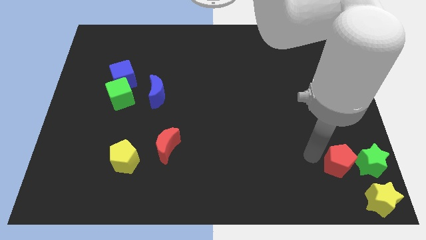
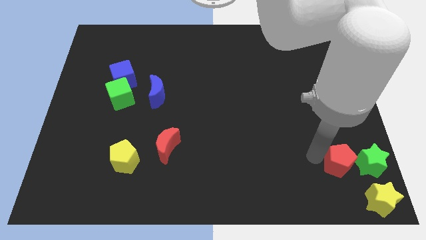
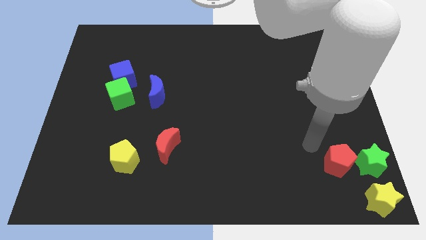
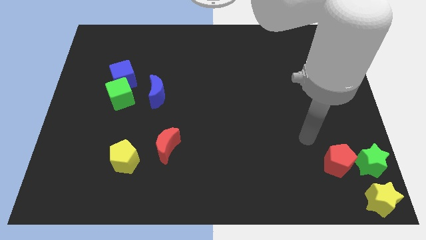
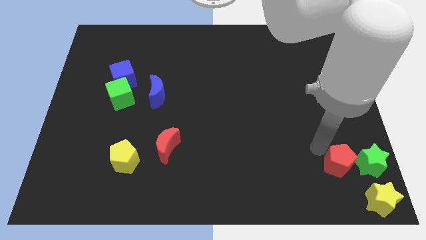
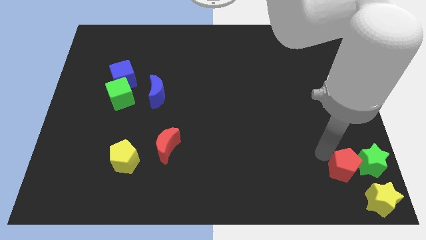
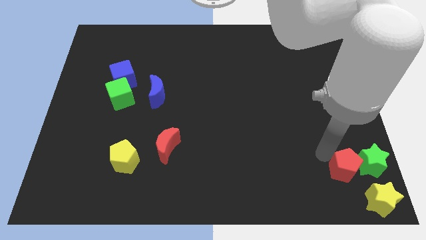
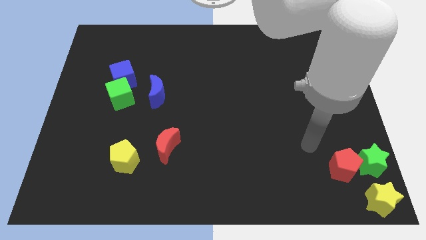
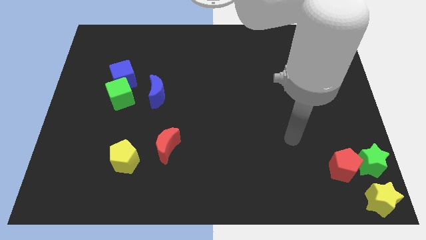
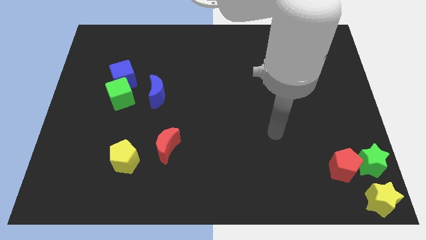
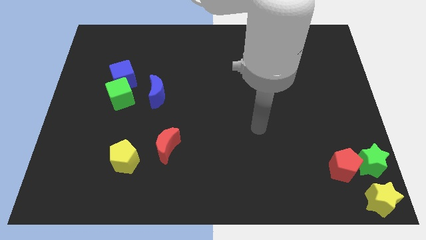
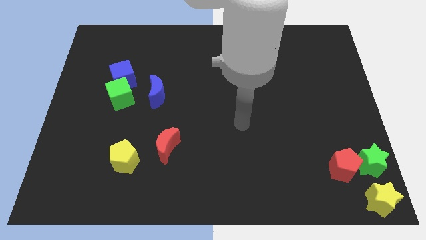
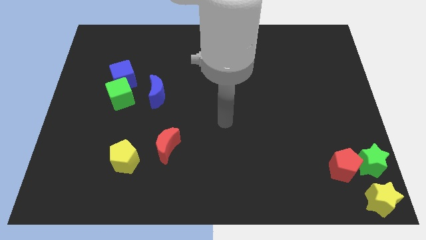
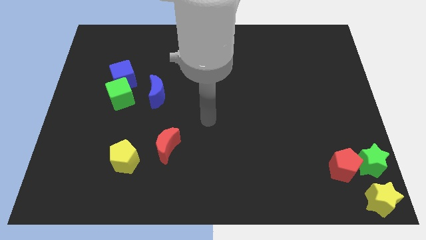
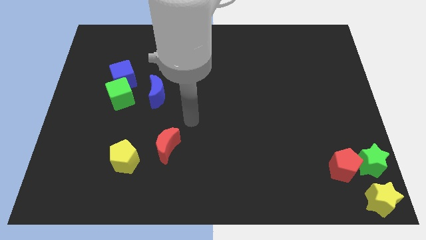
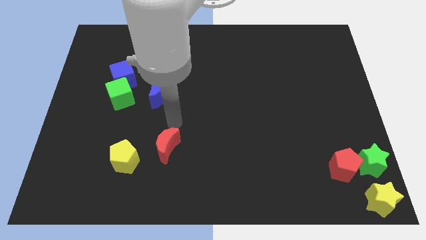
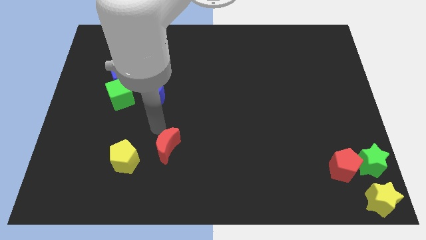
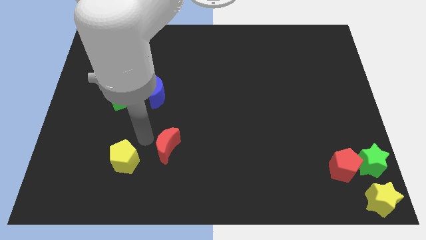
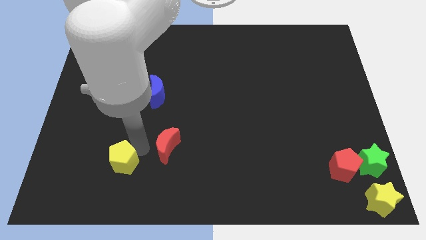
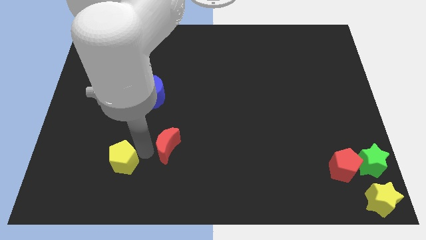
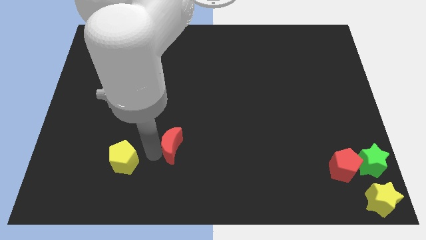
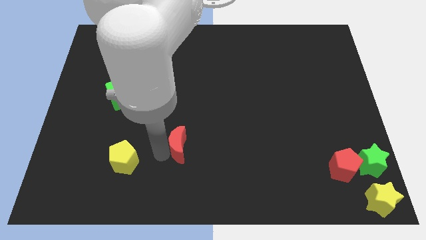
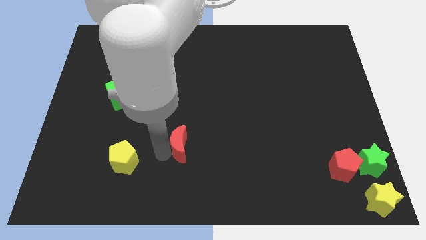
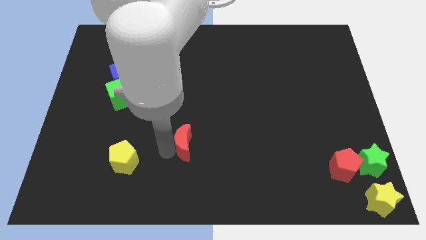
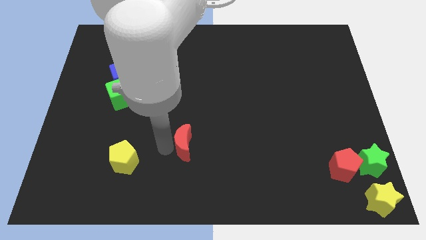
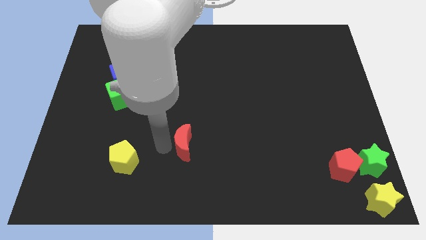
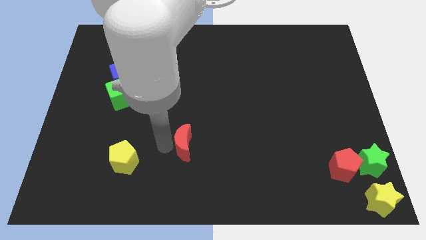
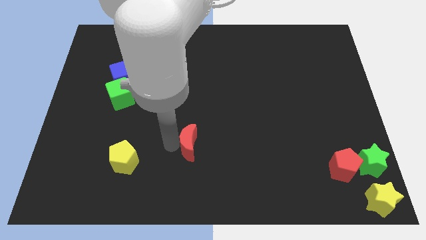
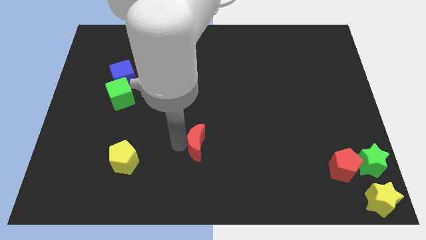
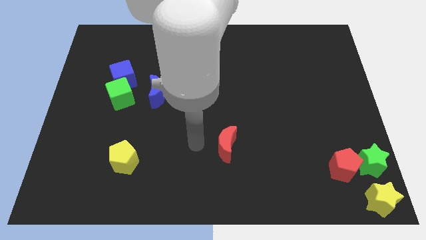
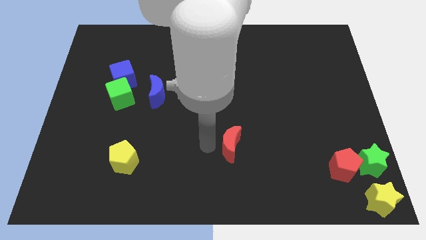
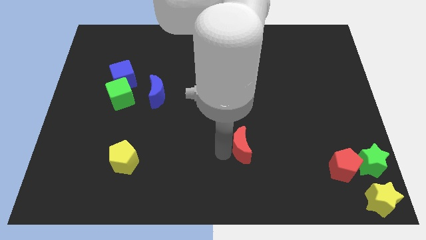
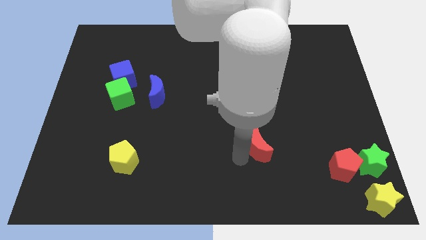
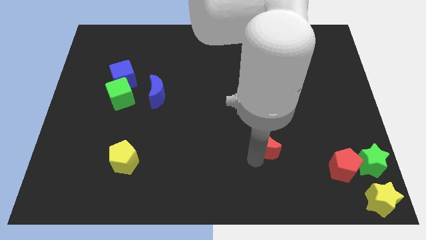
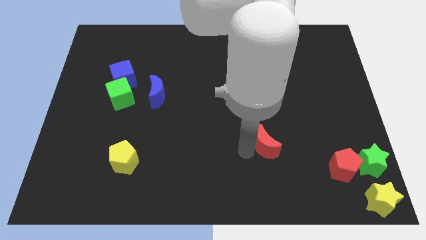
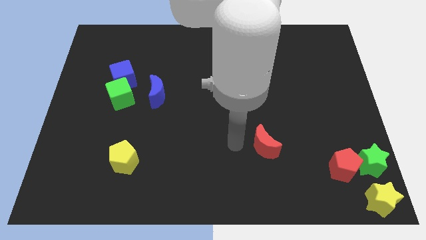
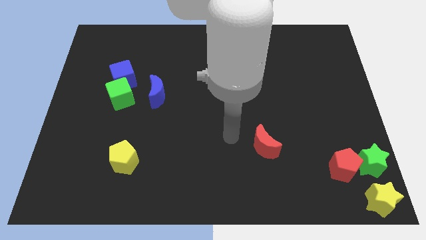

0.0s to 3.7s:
slightly push the red crescent towards the right to the board

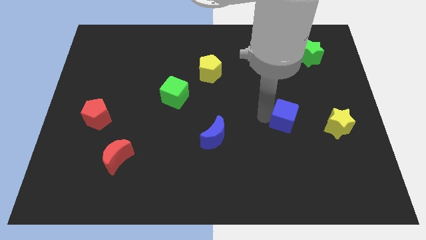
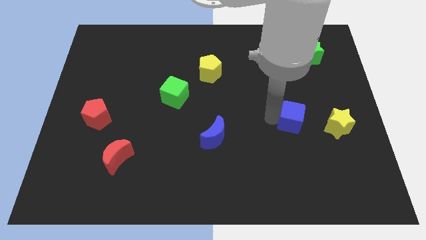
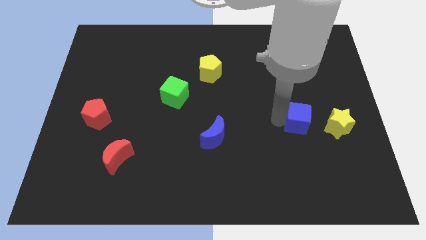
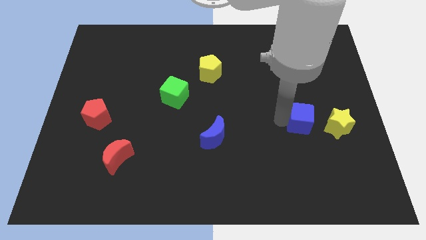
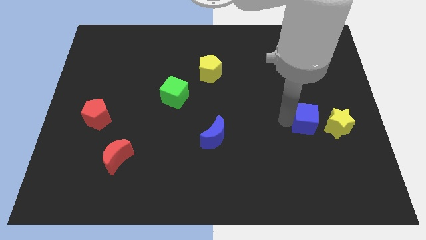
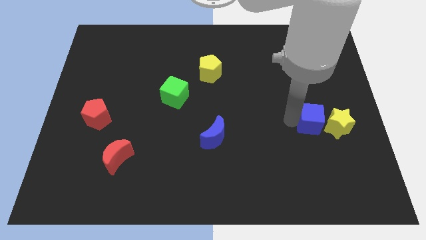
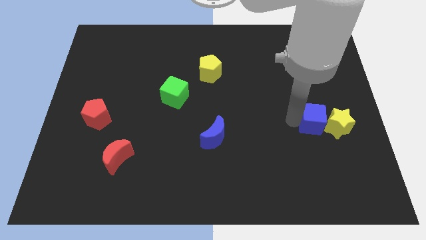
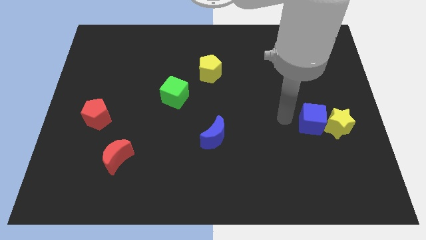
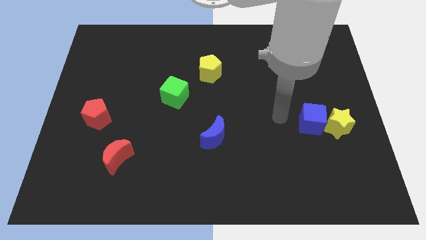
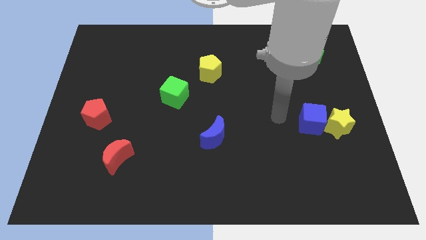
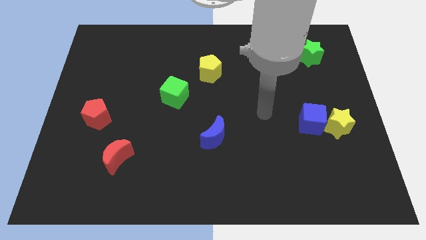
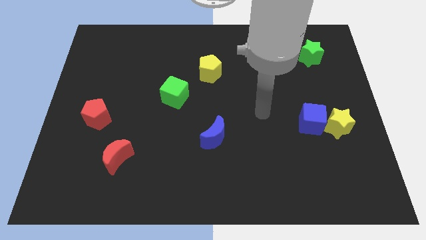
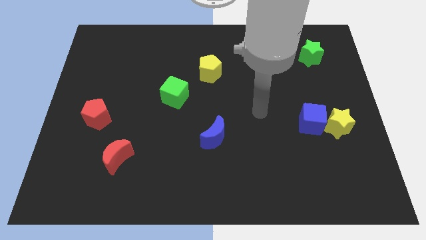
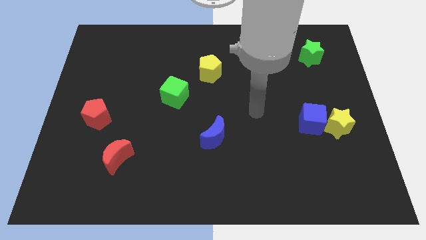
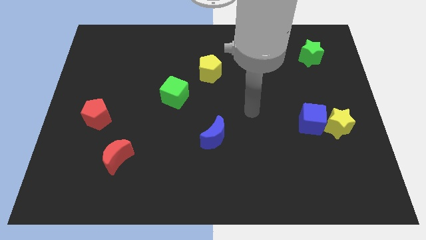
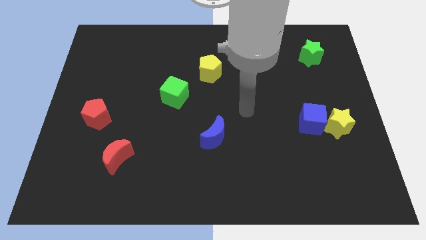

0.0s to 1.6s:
move the blue cube to the left of the yellow star

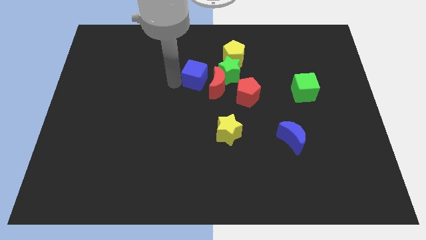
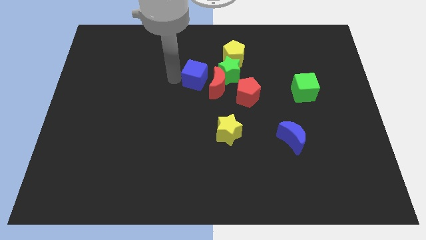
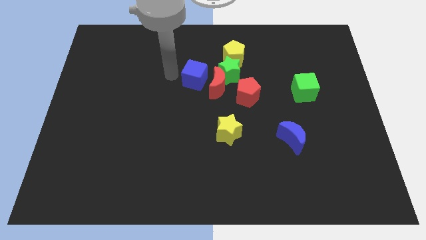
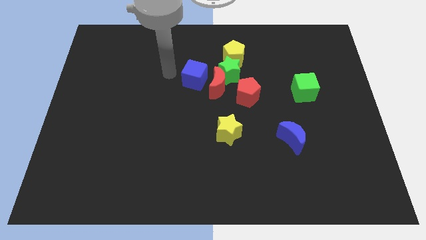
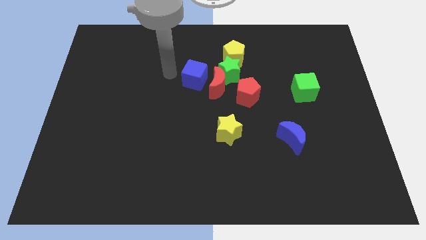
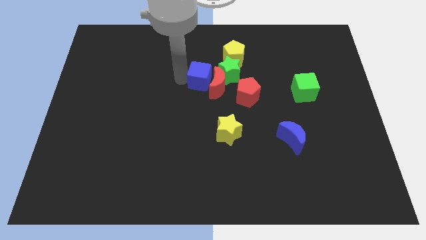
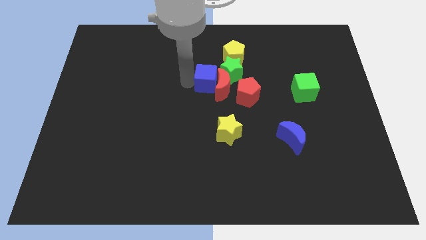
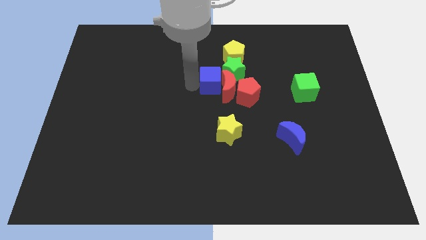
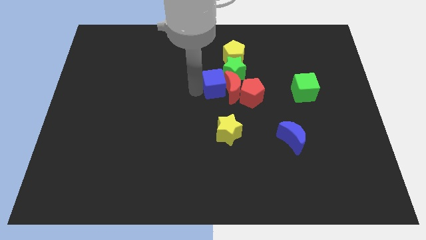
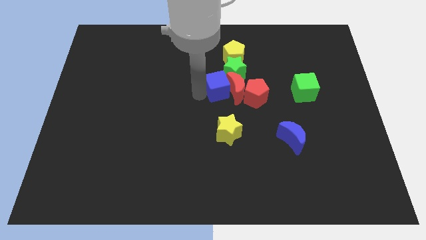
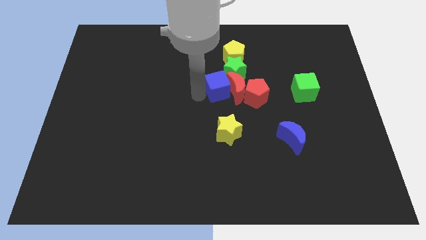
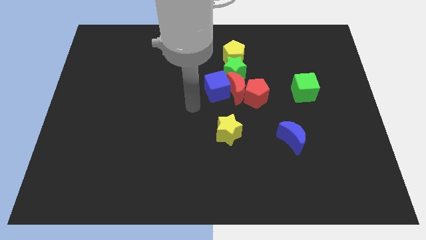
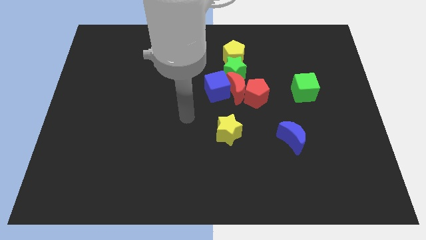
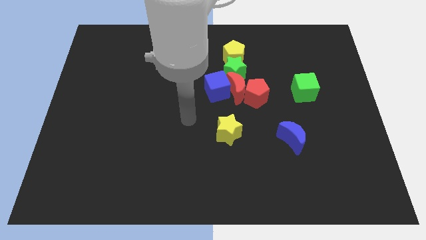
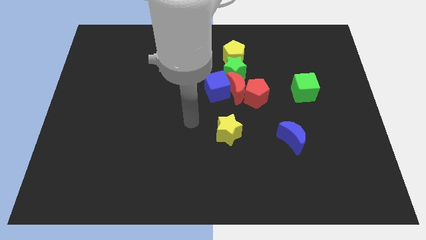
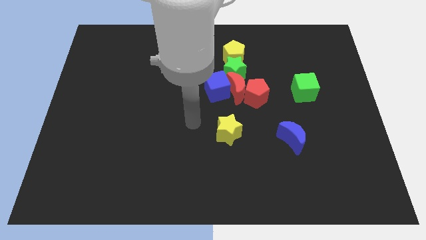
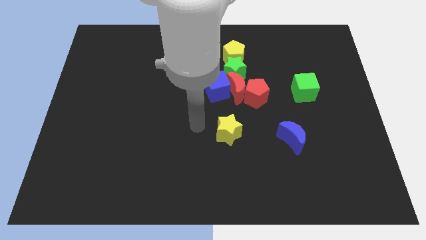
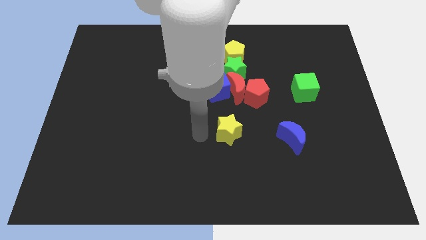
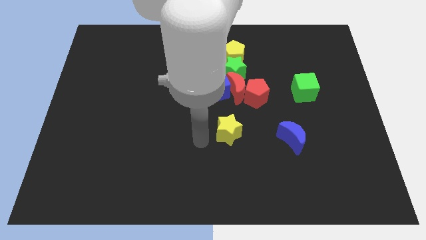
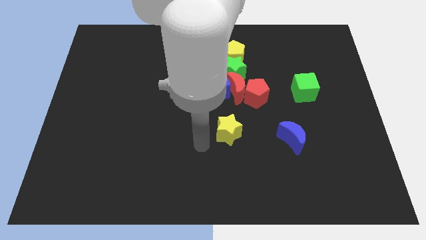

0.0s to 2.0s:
push the blue cube into the red crescent

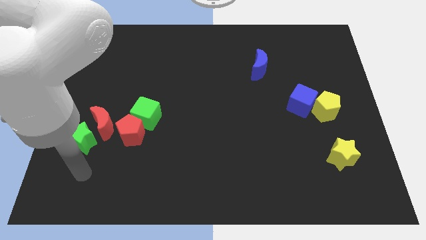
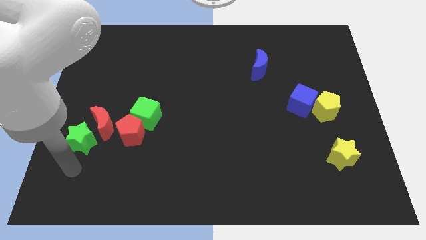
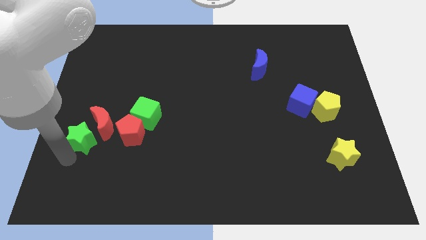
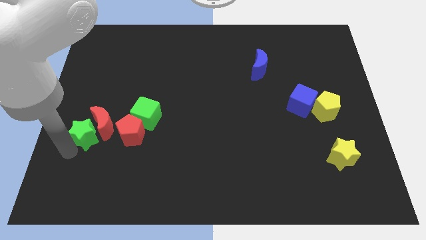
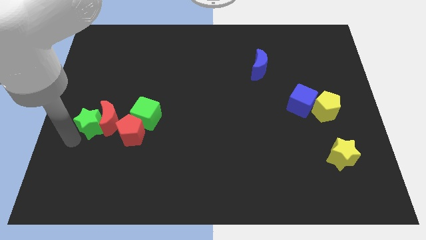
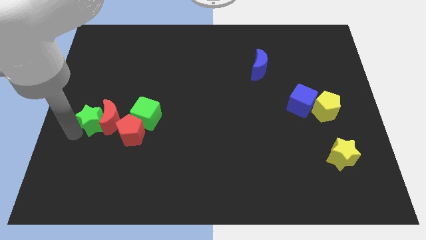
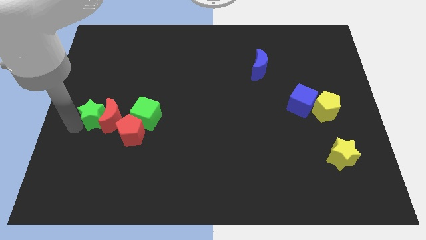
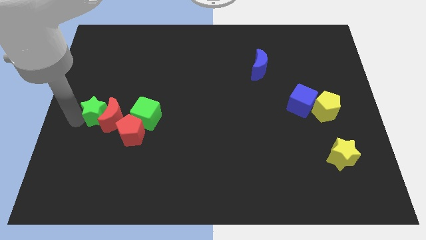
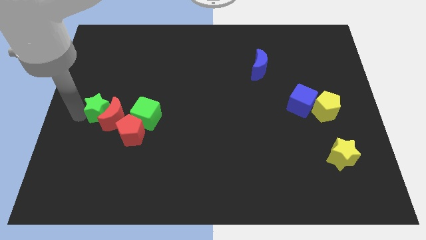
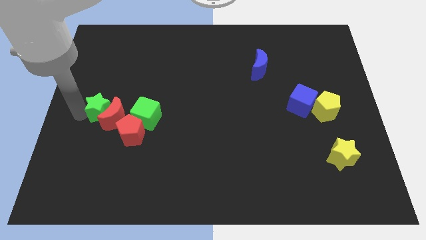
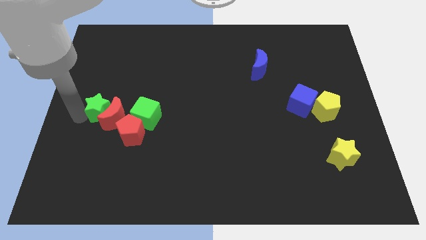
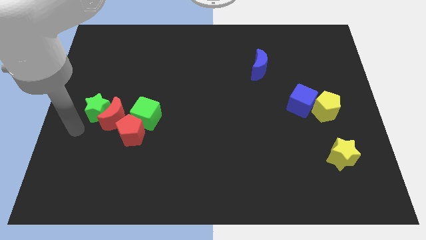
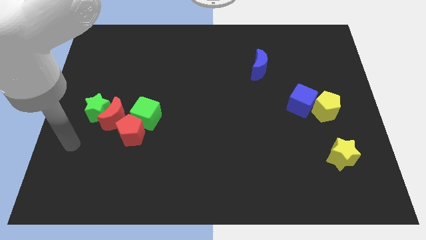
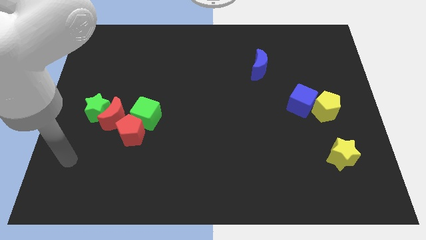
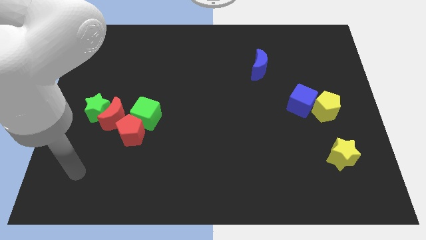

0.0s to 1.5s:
move green star into the red moon

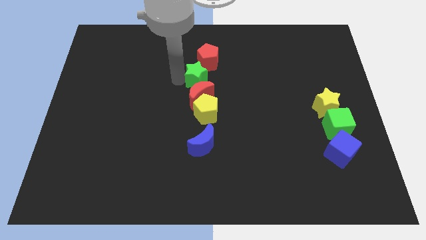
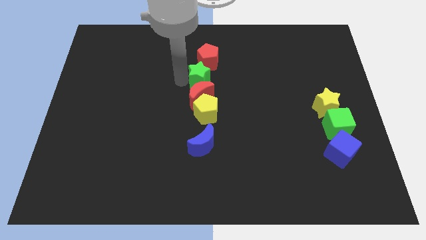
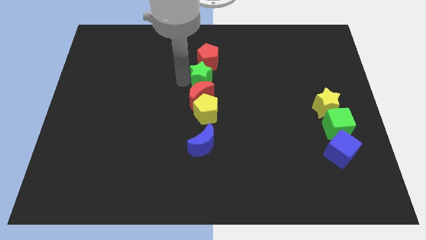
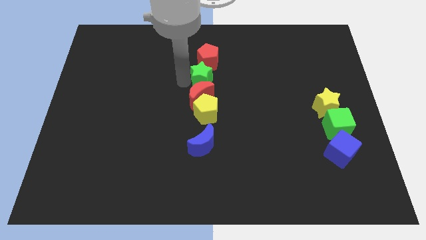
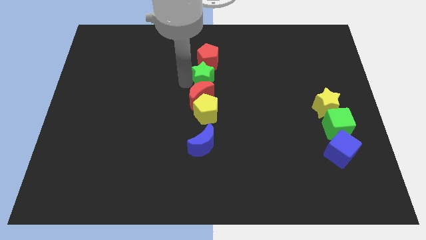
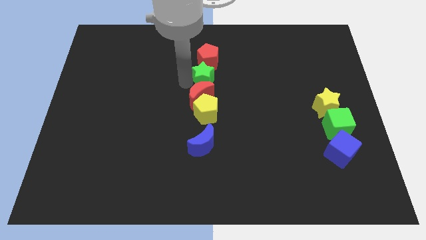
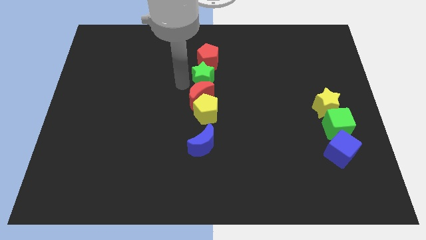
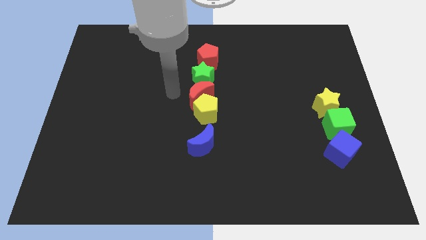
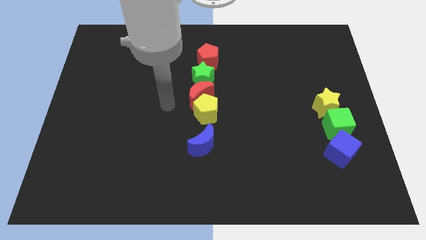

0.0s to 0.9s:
place the green star below the red pentagon
